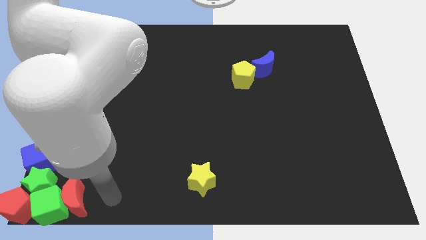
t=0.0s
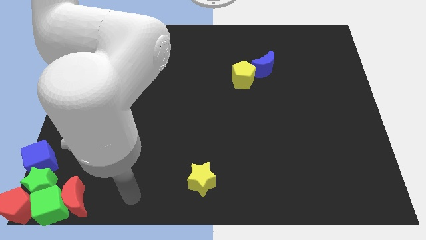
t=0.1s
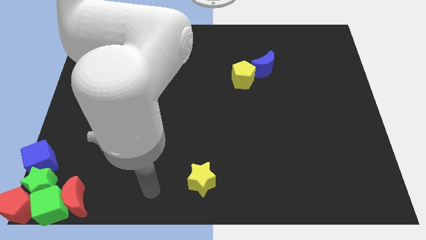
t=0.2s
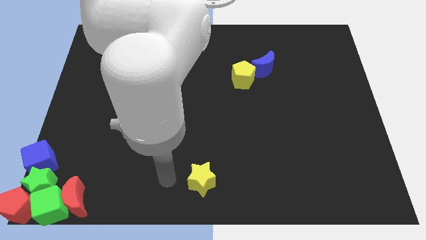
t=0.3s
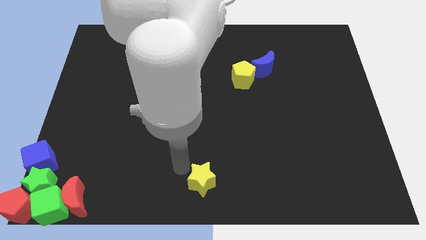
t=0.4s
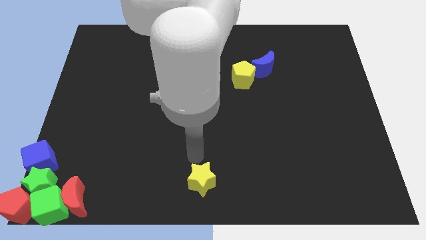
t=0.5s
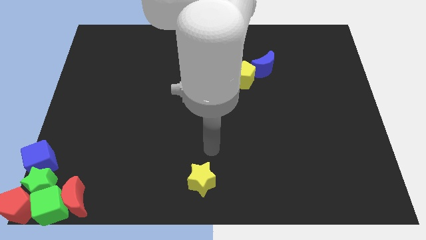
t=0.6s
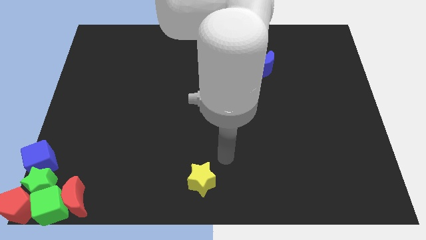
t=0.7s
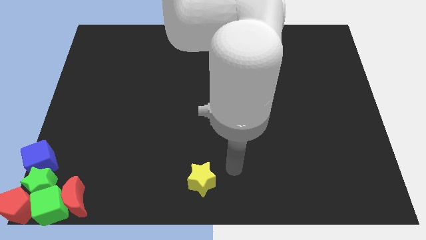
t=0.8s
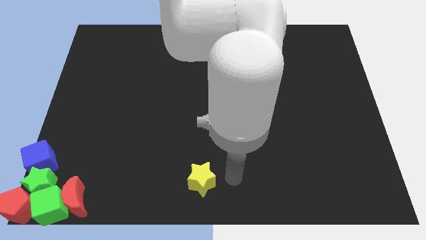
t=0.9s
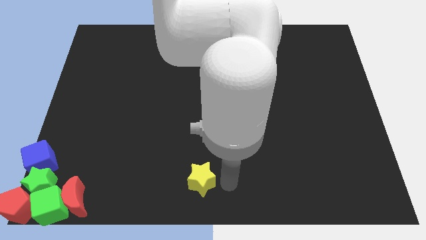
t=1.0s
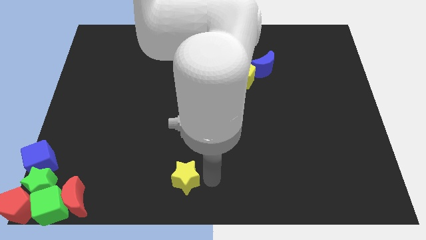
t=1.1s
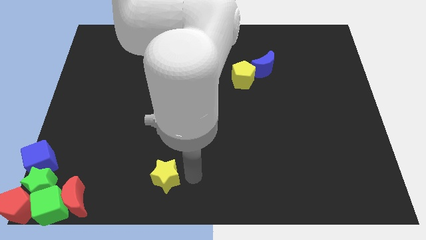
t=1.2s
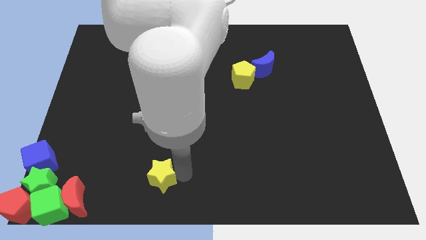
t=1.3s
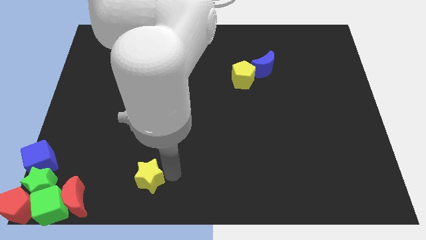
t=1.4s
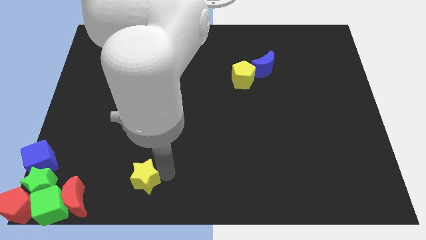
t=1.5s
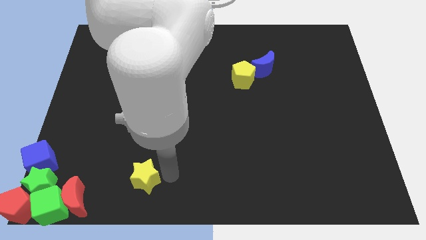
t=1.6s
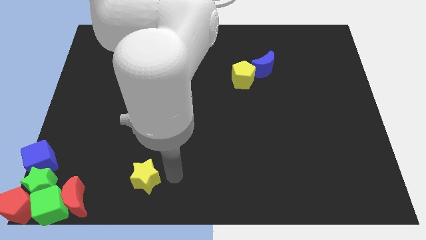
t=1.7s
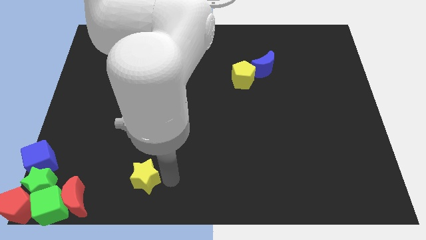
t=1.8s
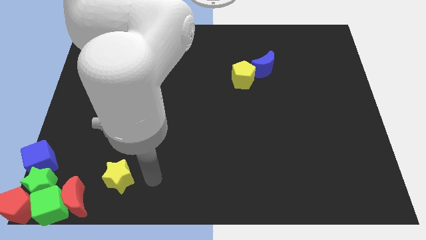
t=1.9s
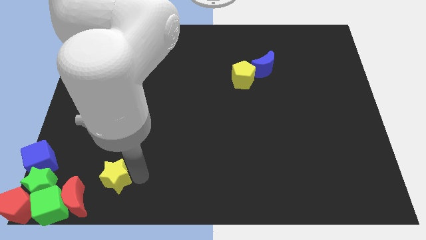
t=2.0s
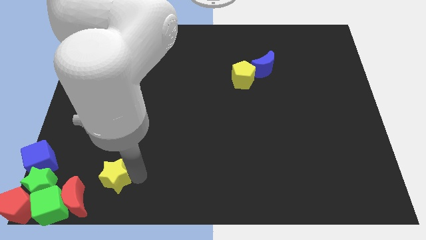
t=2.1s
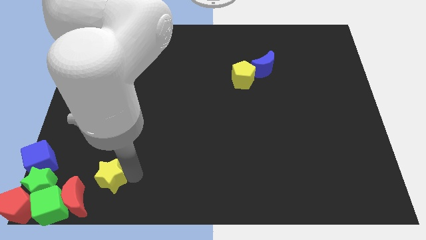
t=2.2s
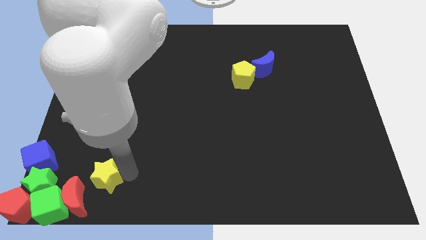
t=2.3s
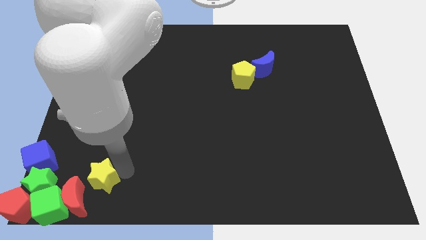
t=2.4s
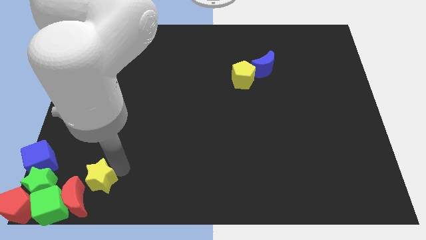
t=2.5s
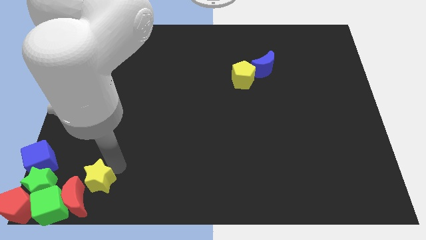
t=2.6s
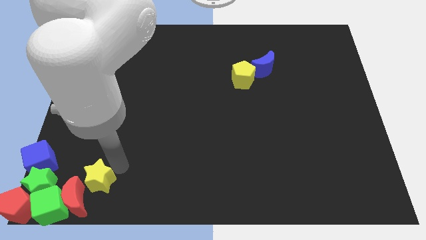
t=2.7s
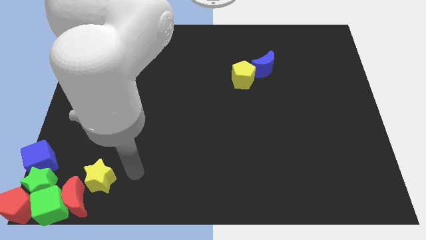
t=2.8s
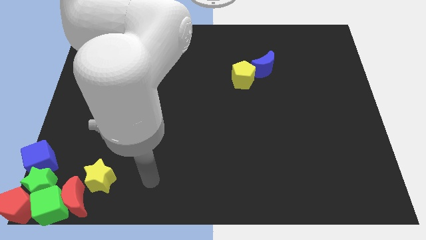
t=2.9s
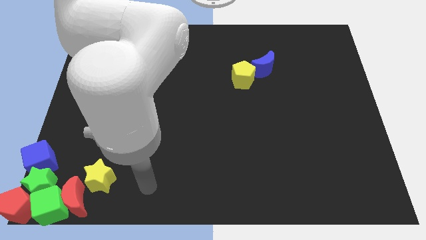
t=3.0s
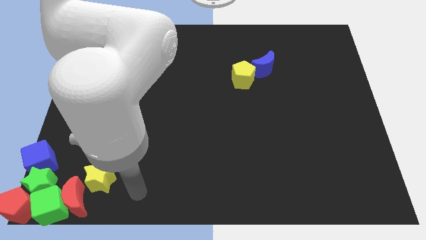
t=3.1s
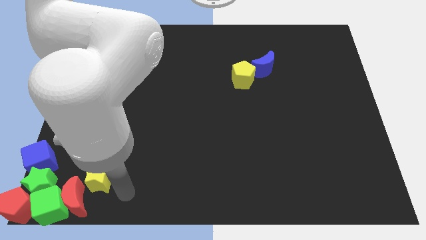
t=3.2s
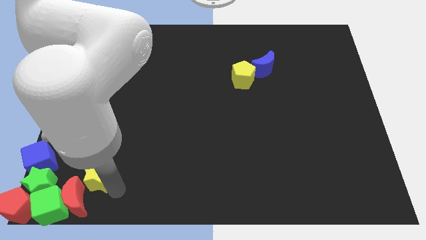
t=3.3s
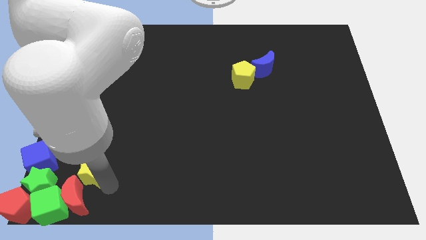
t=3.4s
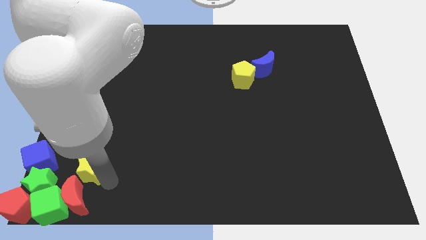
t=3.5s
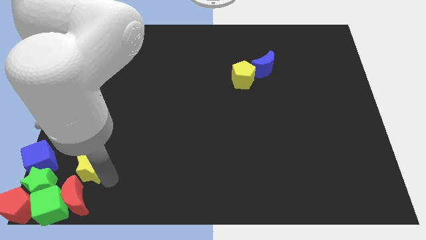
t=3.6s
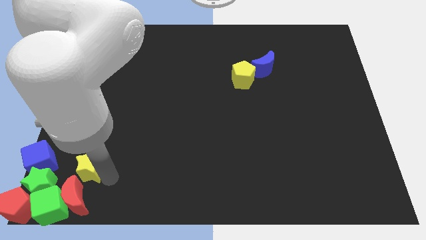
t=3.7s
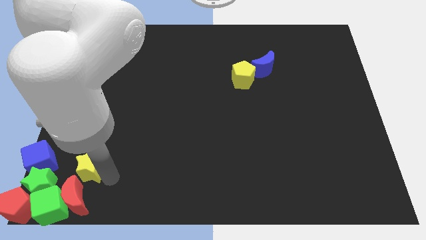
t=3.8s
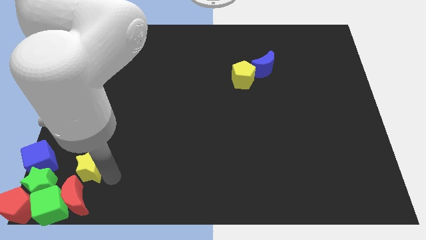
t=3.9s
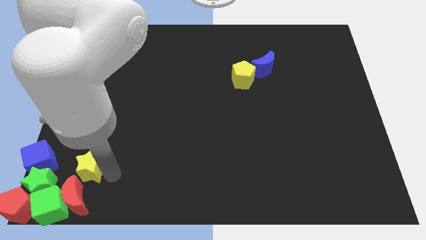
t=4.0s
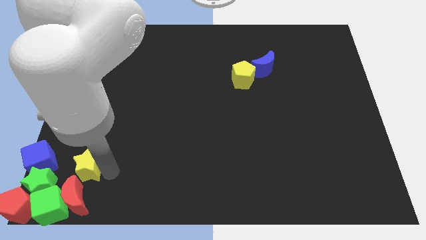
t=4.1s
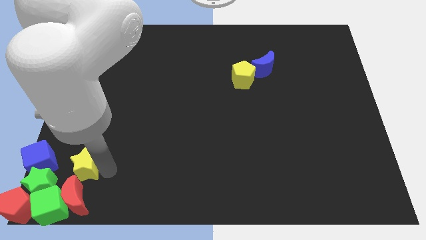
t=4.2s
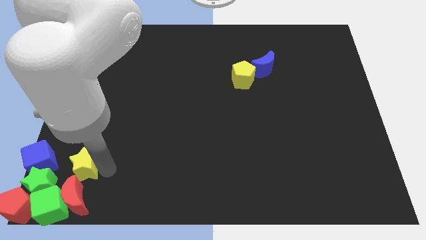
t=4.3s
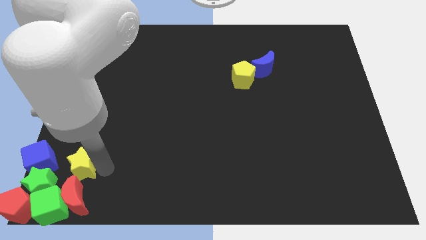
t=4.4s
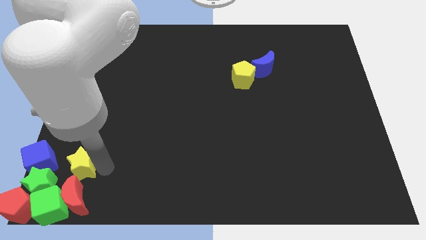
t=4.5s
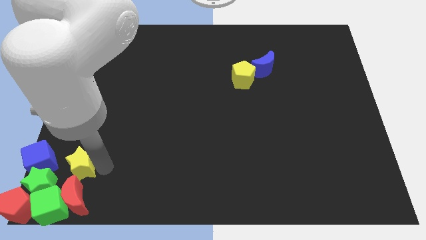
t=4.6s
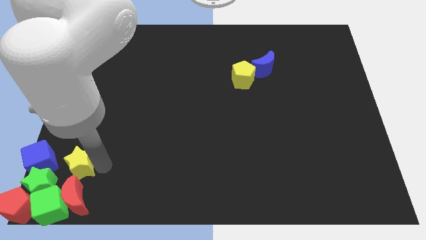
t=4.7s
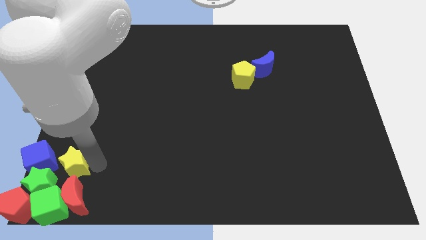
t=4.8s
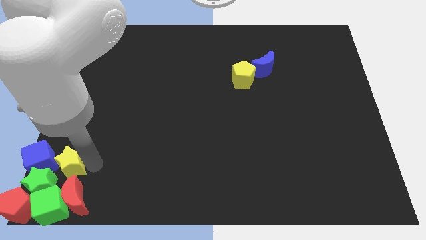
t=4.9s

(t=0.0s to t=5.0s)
move the yellow star above the red crescent

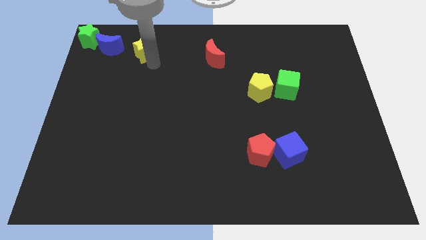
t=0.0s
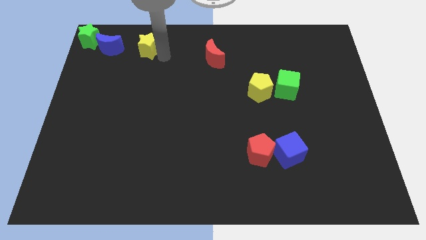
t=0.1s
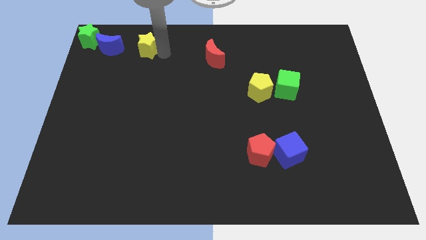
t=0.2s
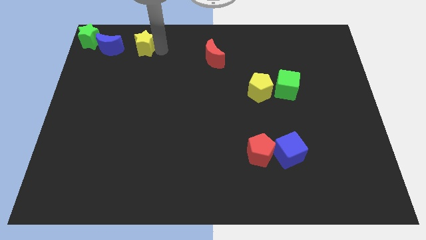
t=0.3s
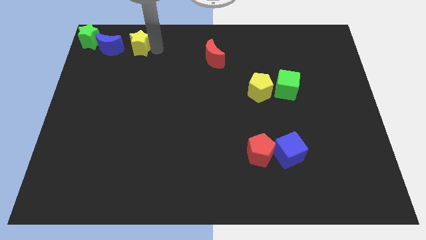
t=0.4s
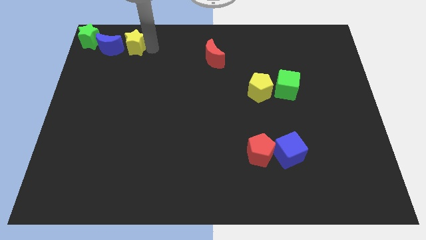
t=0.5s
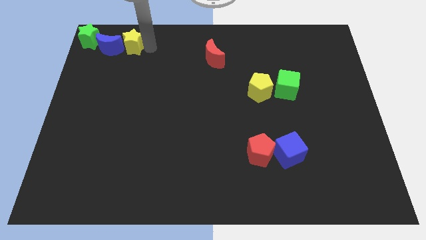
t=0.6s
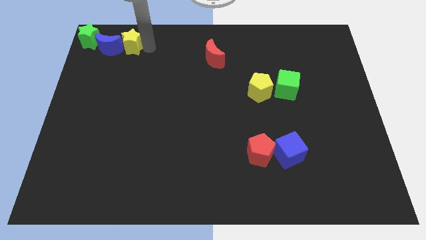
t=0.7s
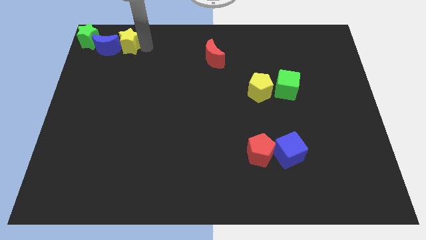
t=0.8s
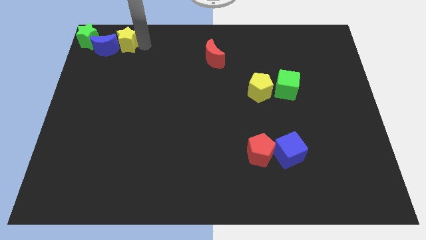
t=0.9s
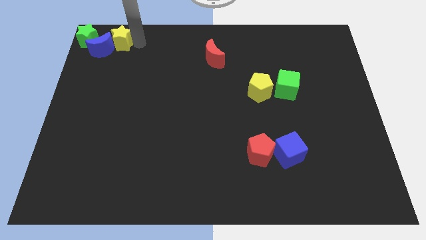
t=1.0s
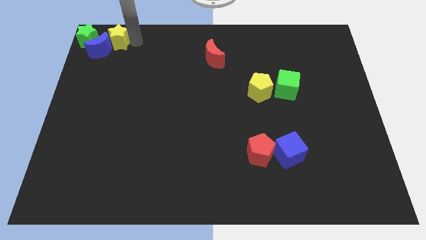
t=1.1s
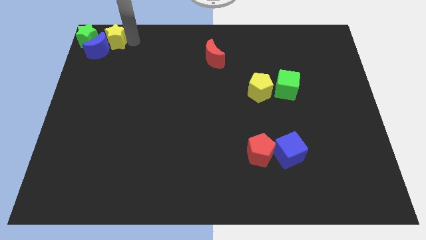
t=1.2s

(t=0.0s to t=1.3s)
push yellow star into the blue crescent

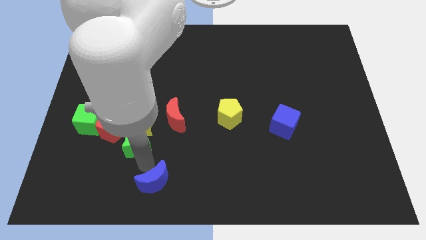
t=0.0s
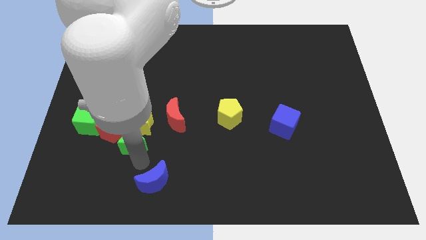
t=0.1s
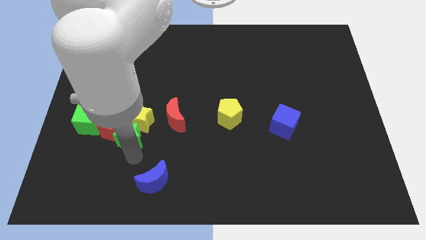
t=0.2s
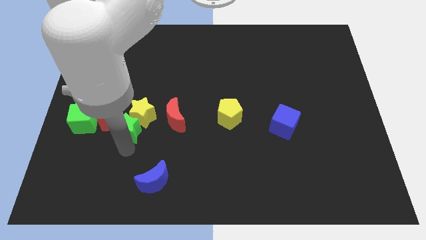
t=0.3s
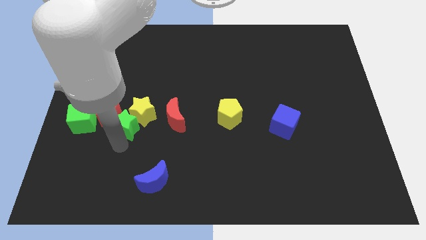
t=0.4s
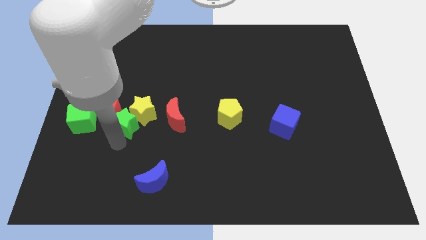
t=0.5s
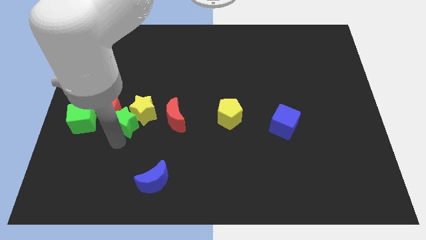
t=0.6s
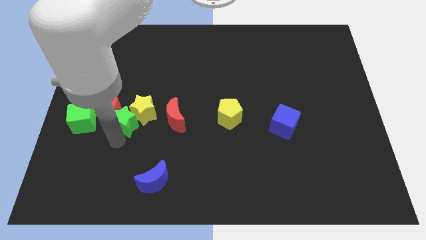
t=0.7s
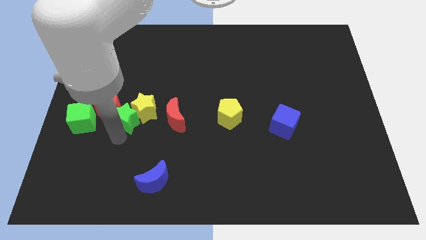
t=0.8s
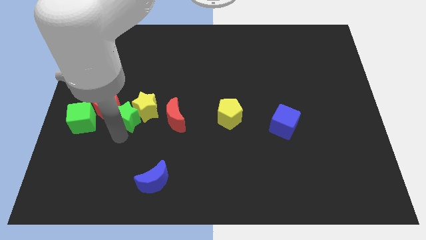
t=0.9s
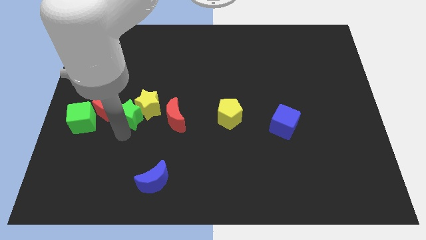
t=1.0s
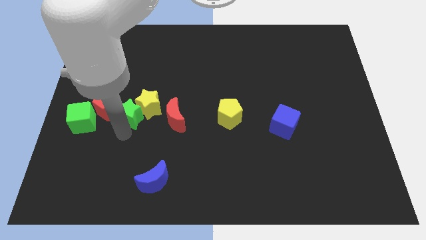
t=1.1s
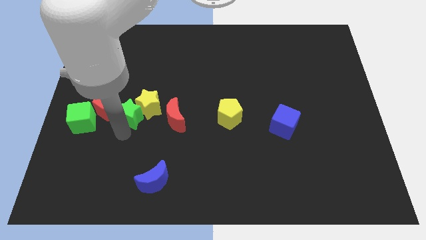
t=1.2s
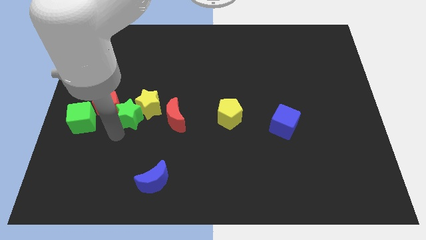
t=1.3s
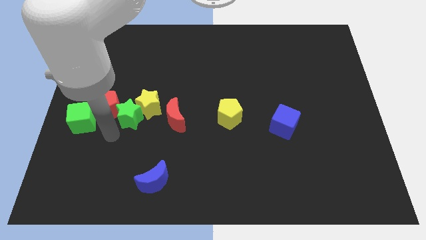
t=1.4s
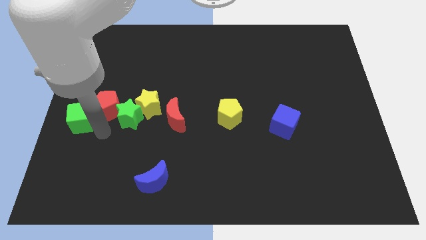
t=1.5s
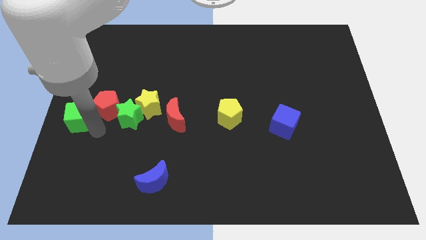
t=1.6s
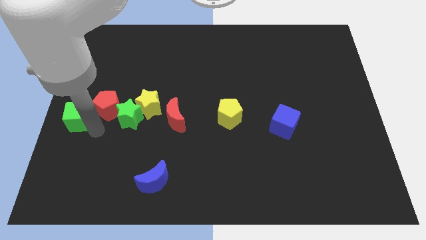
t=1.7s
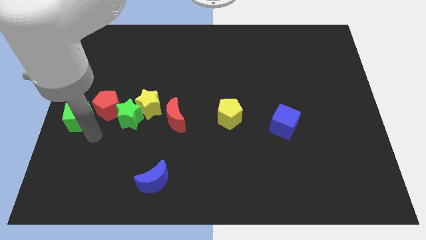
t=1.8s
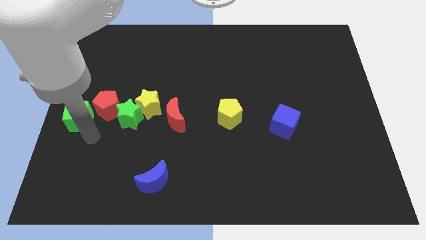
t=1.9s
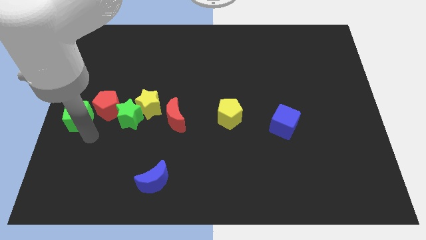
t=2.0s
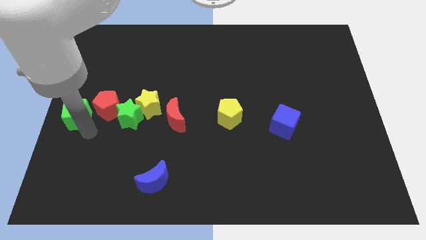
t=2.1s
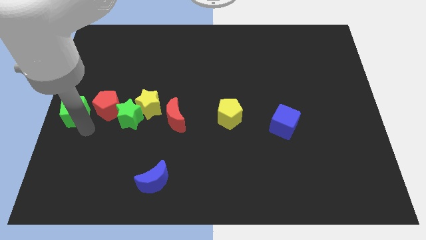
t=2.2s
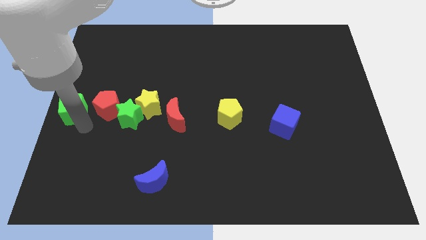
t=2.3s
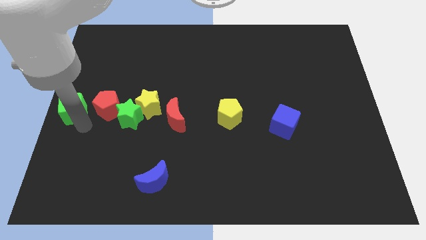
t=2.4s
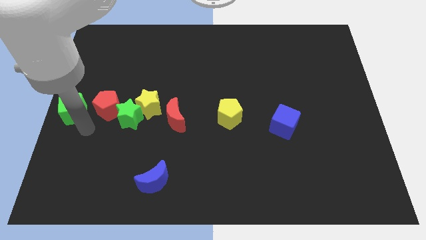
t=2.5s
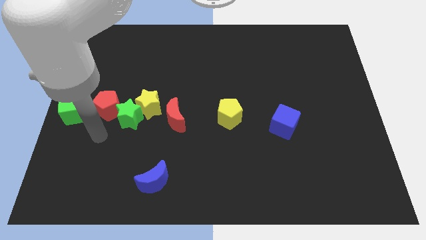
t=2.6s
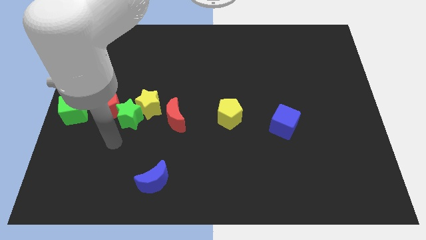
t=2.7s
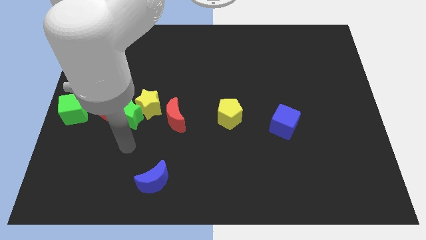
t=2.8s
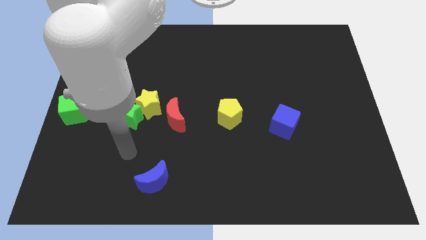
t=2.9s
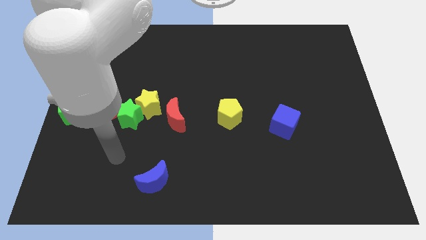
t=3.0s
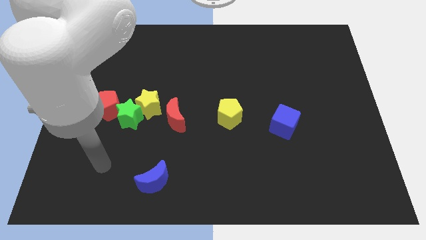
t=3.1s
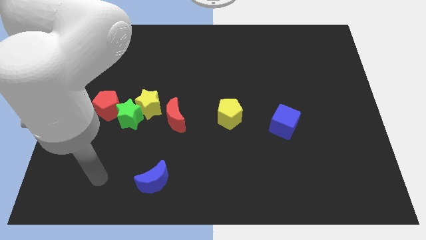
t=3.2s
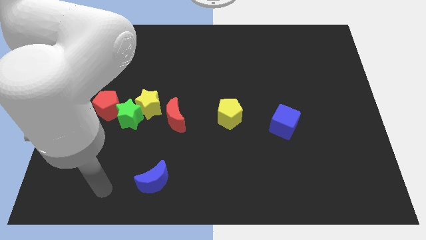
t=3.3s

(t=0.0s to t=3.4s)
move stars and the green cube to the top of the board
